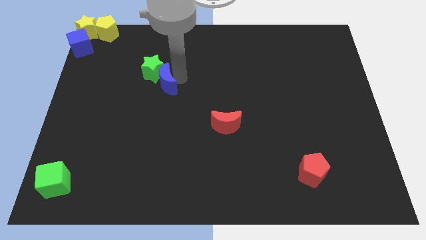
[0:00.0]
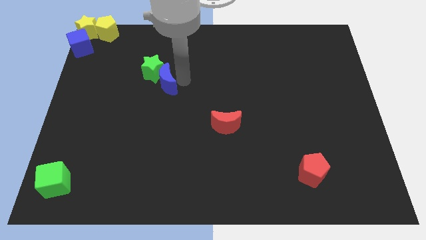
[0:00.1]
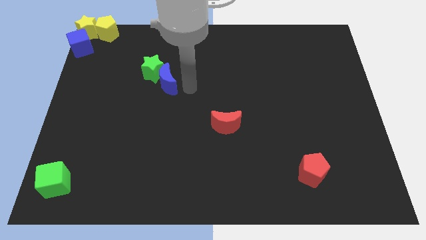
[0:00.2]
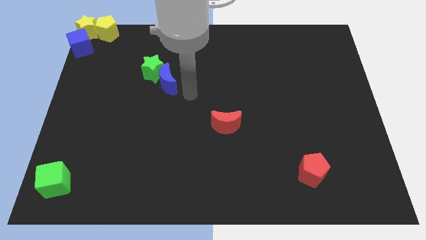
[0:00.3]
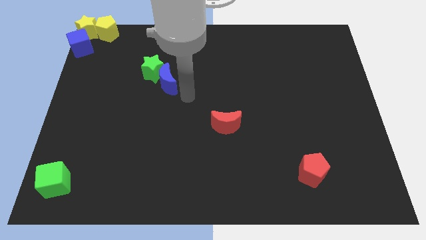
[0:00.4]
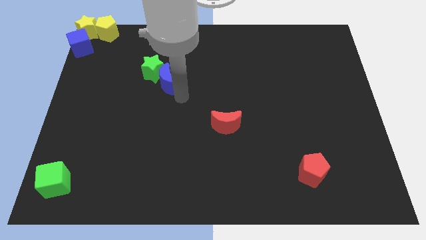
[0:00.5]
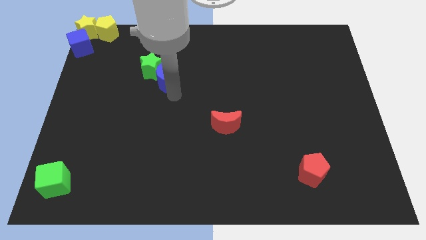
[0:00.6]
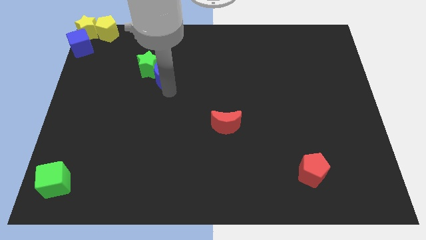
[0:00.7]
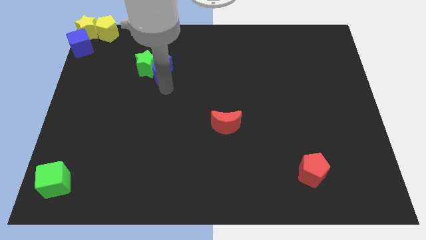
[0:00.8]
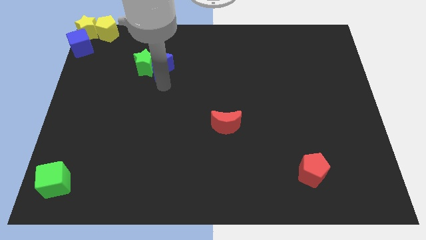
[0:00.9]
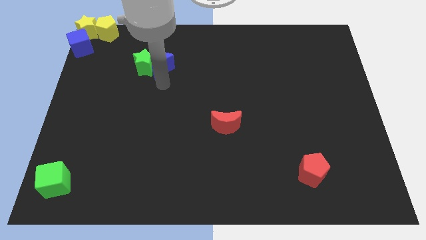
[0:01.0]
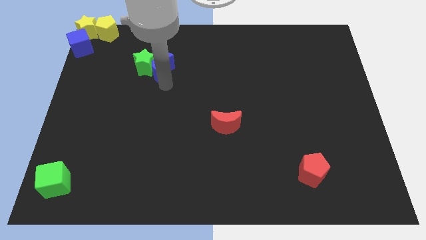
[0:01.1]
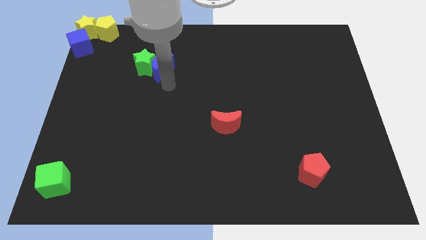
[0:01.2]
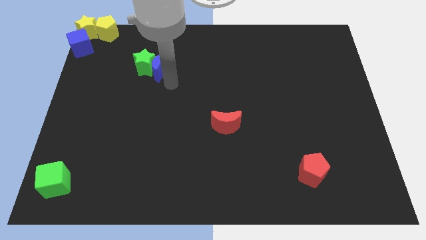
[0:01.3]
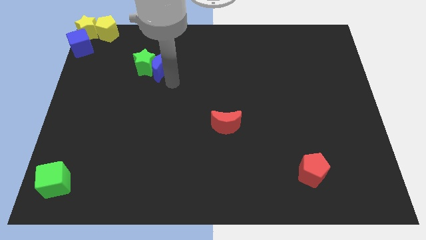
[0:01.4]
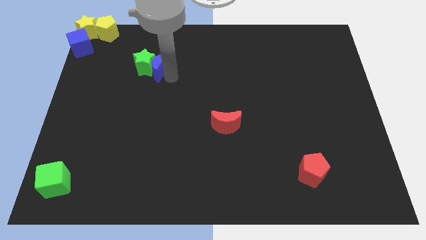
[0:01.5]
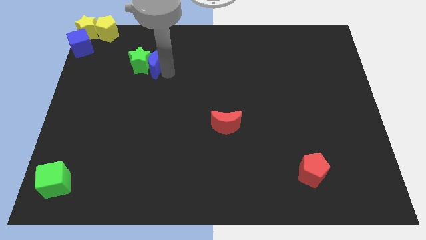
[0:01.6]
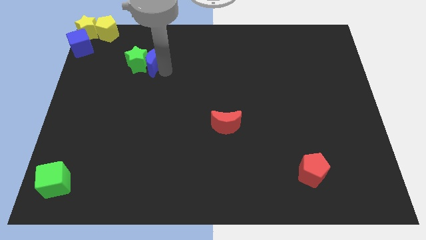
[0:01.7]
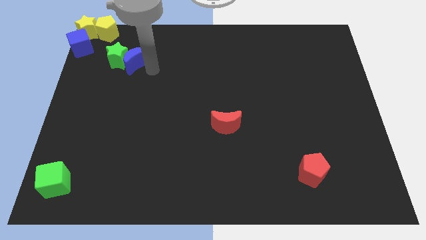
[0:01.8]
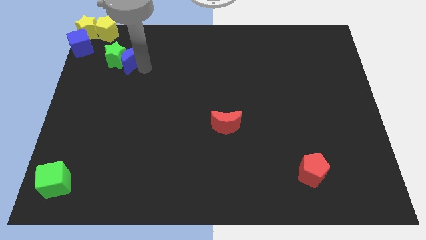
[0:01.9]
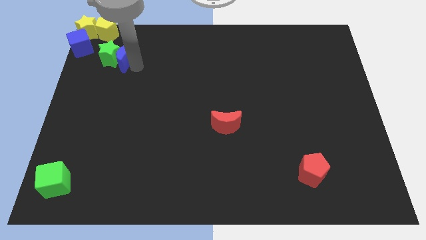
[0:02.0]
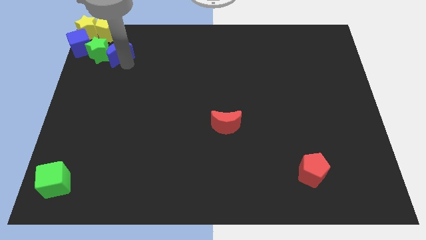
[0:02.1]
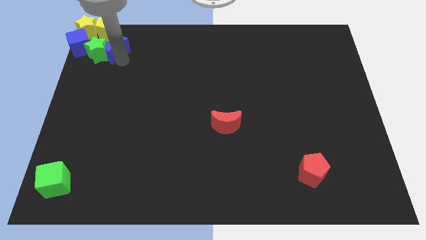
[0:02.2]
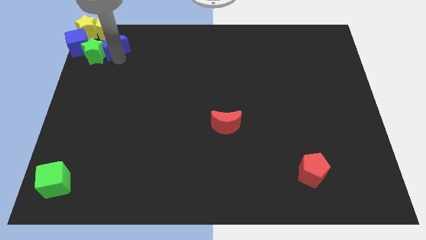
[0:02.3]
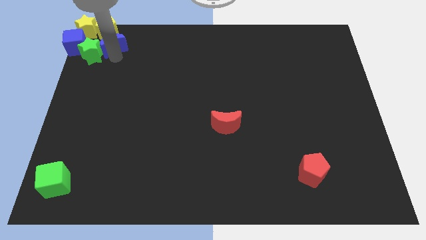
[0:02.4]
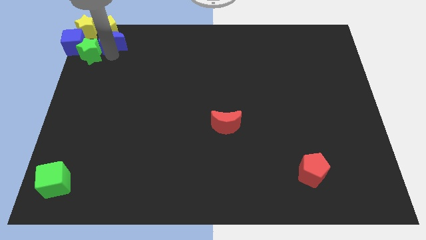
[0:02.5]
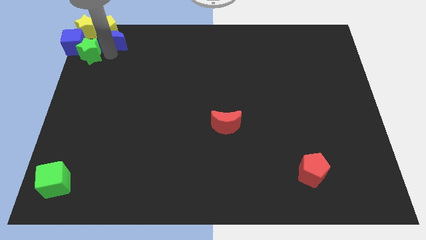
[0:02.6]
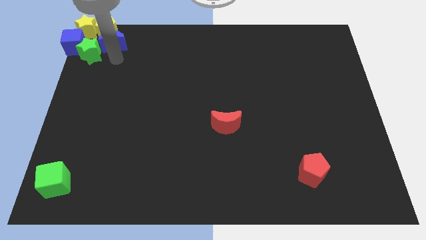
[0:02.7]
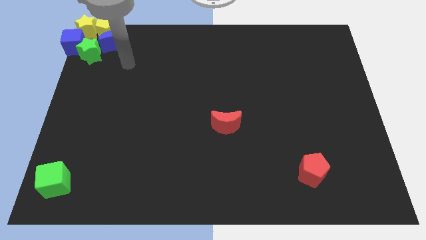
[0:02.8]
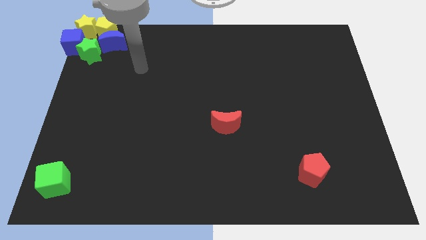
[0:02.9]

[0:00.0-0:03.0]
place the blue moon below the yellow pentagon

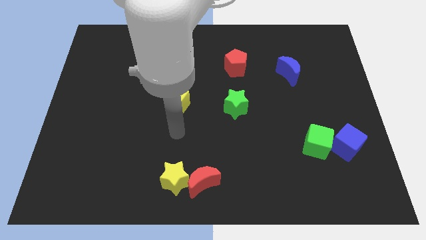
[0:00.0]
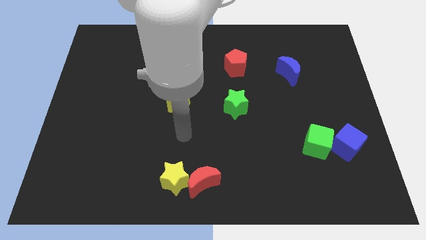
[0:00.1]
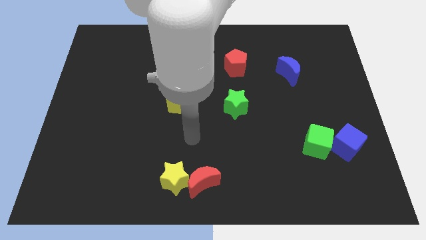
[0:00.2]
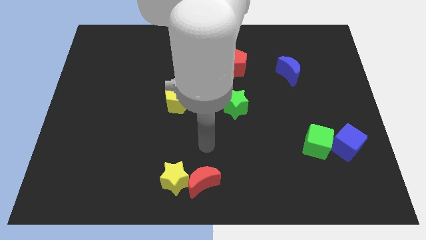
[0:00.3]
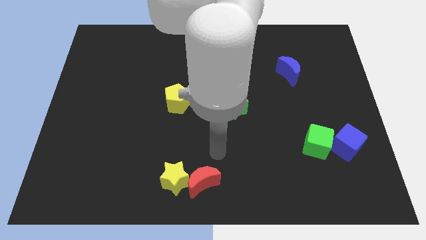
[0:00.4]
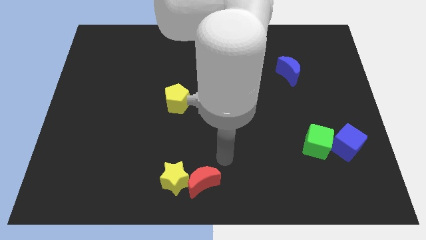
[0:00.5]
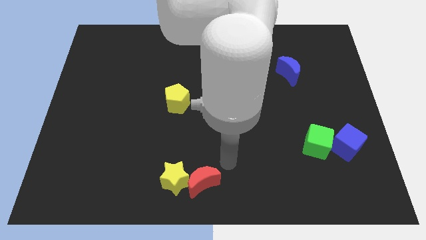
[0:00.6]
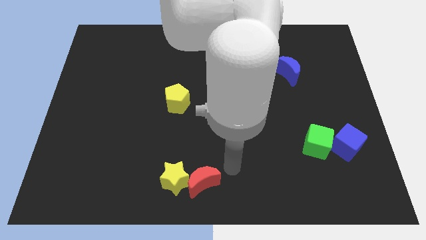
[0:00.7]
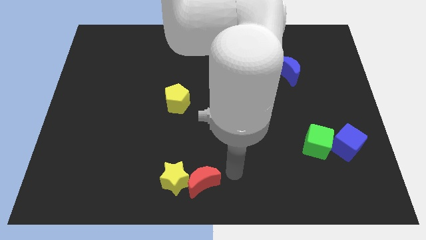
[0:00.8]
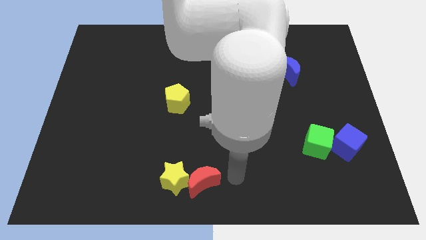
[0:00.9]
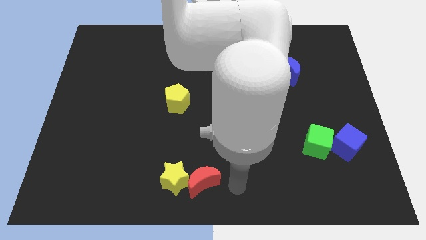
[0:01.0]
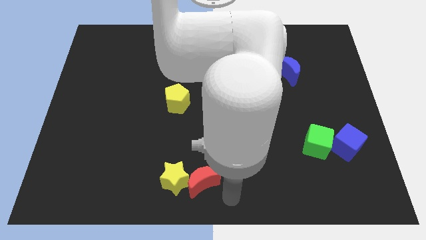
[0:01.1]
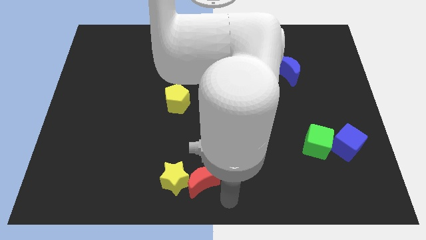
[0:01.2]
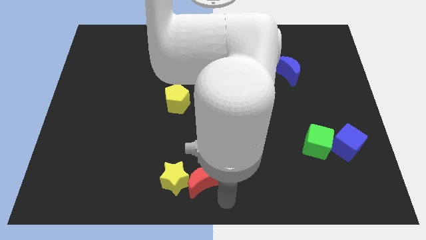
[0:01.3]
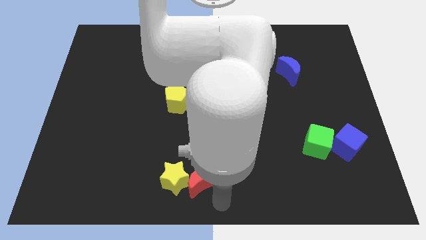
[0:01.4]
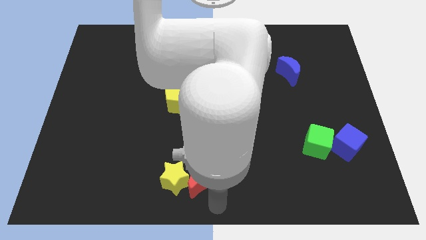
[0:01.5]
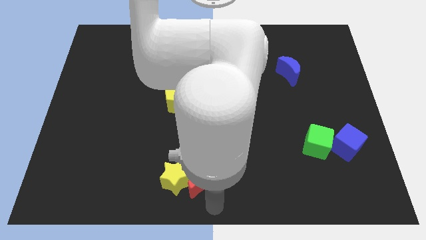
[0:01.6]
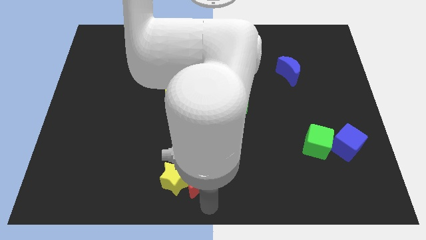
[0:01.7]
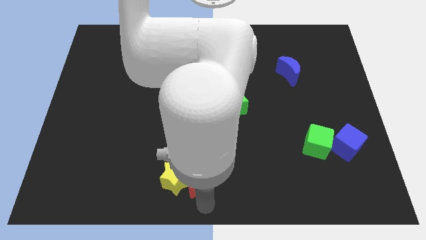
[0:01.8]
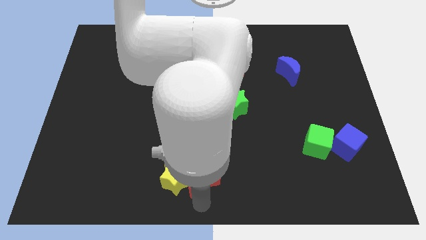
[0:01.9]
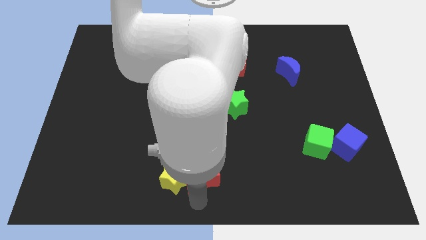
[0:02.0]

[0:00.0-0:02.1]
move arm near red moon

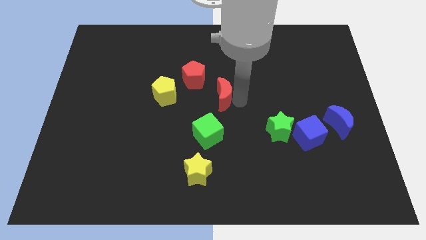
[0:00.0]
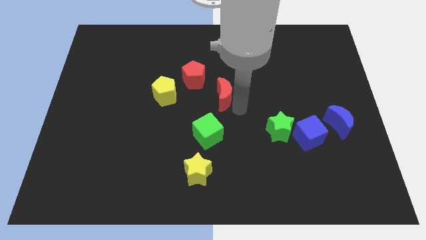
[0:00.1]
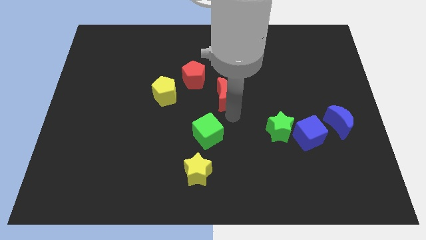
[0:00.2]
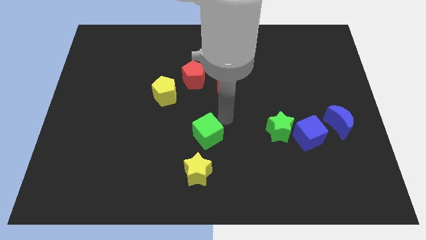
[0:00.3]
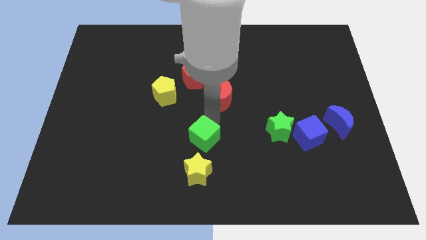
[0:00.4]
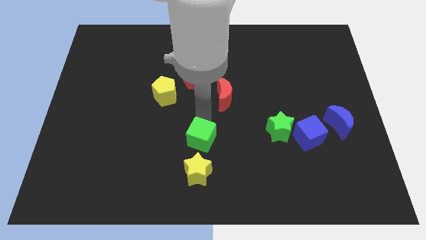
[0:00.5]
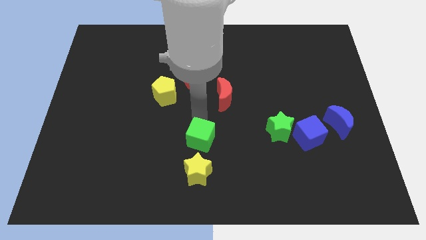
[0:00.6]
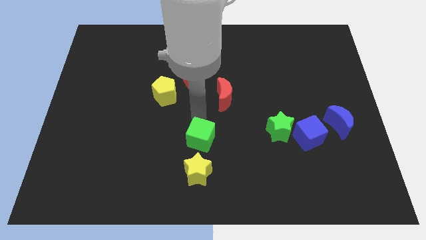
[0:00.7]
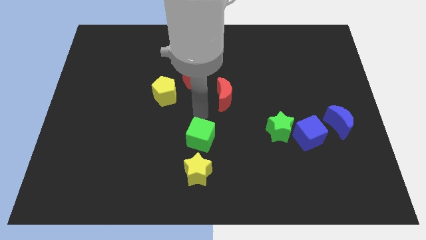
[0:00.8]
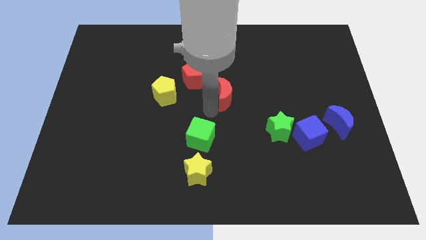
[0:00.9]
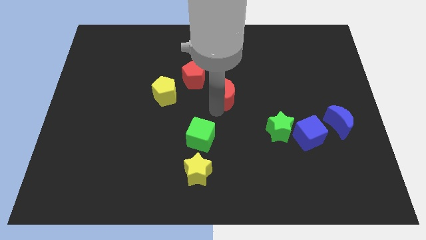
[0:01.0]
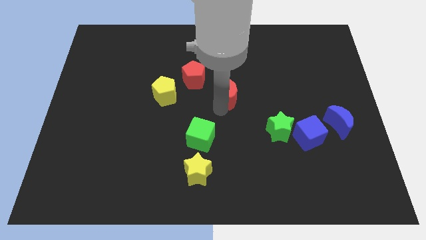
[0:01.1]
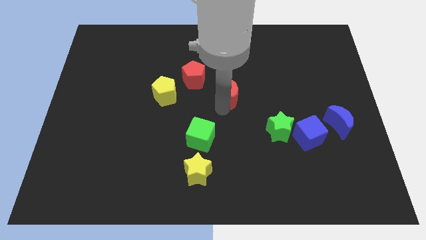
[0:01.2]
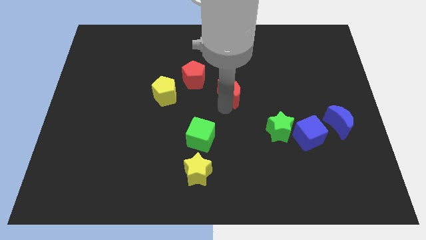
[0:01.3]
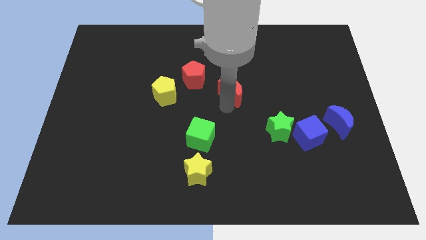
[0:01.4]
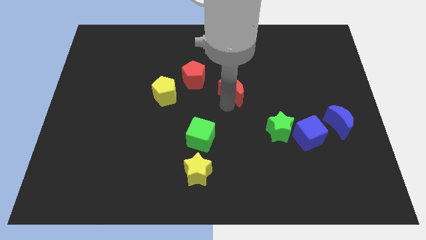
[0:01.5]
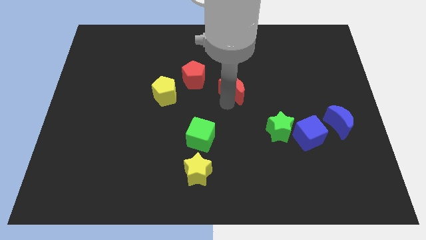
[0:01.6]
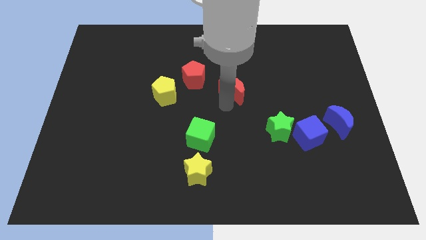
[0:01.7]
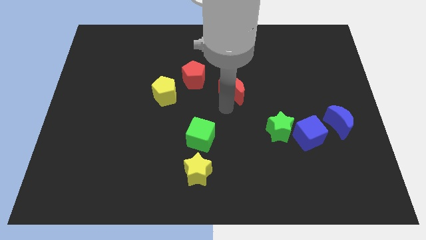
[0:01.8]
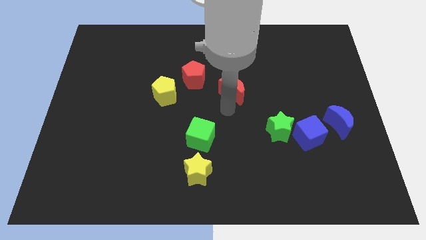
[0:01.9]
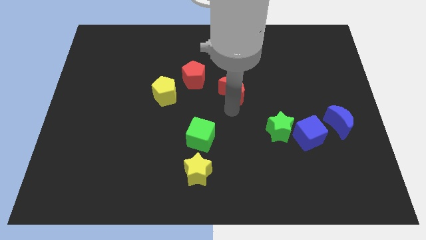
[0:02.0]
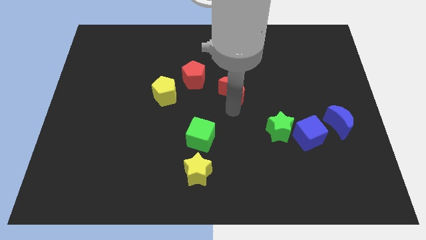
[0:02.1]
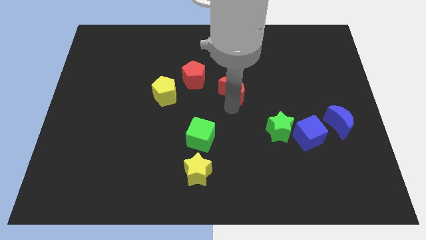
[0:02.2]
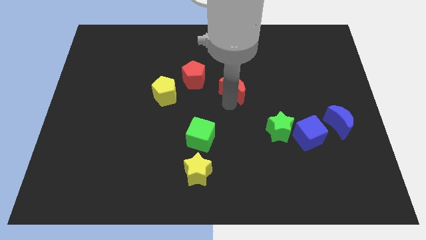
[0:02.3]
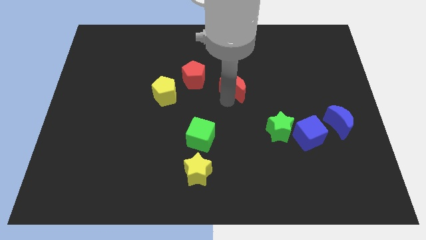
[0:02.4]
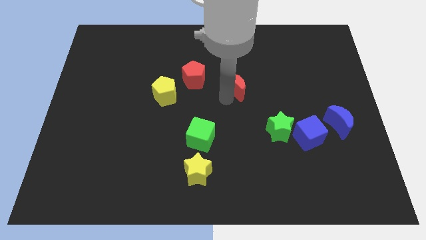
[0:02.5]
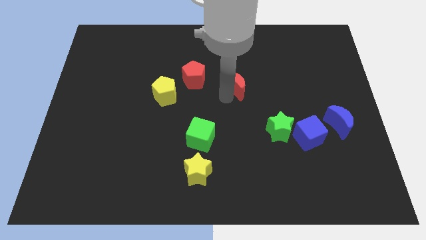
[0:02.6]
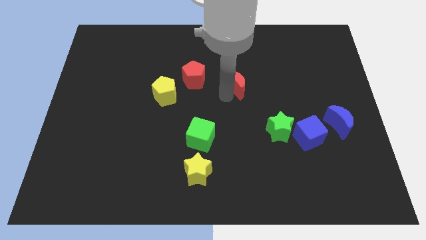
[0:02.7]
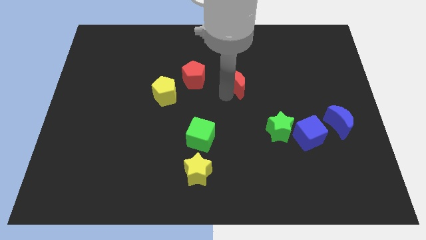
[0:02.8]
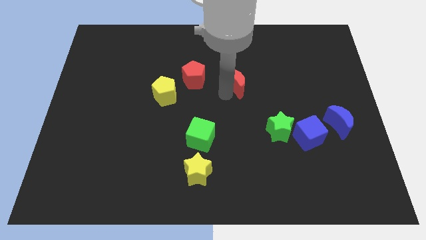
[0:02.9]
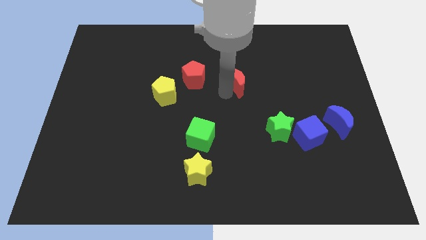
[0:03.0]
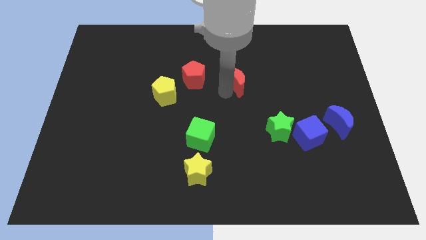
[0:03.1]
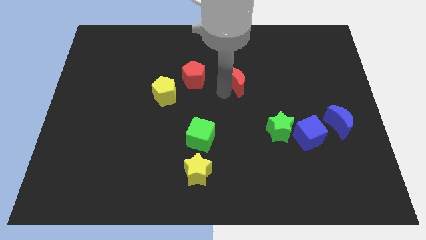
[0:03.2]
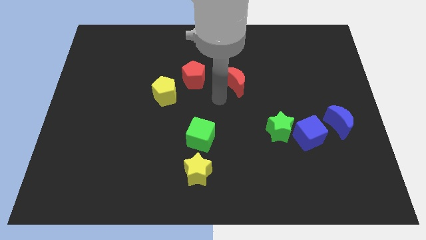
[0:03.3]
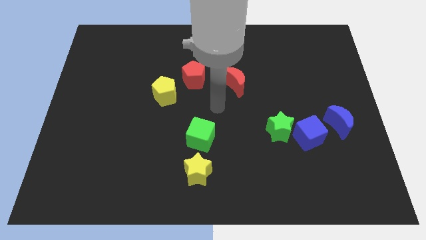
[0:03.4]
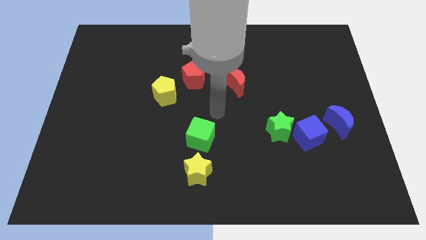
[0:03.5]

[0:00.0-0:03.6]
move red moon to the right of red pentagon

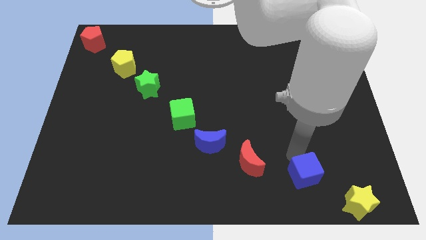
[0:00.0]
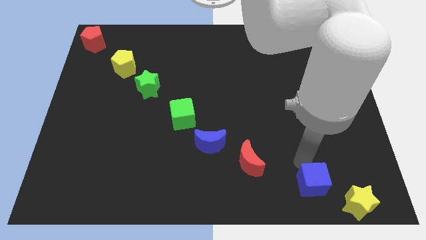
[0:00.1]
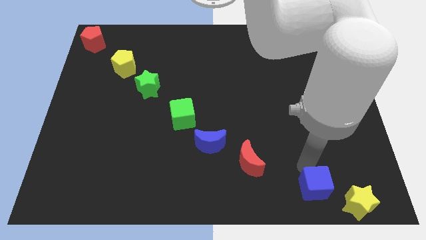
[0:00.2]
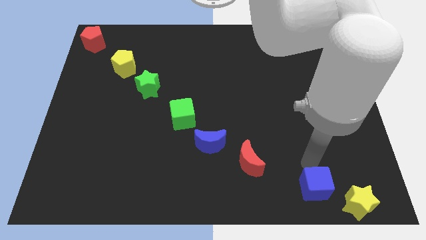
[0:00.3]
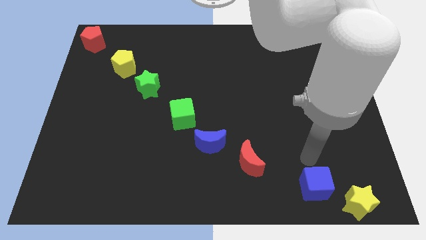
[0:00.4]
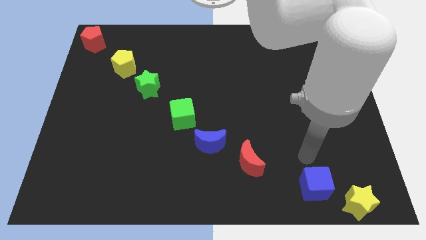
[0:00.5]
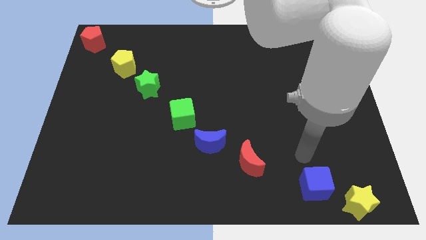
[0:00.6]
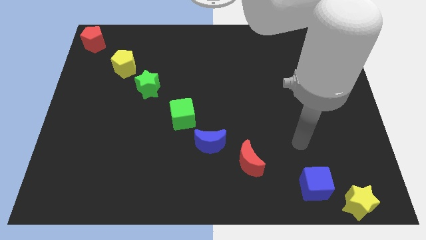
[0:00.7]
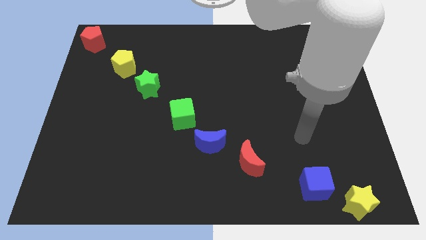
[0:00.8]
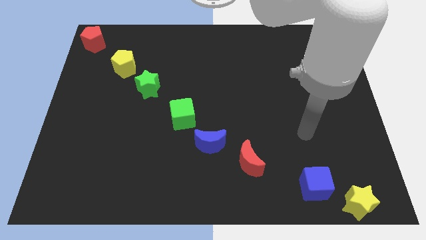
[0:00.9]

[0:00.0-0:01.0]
move the arm away from the blue cube
